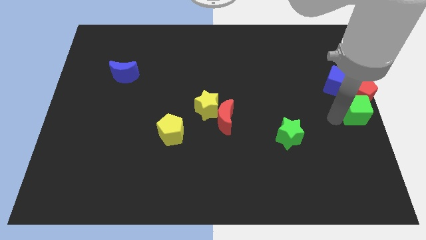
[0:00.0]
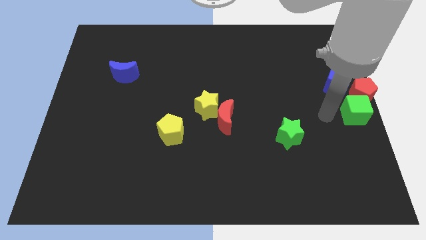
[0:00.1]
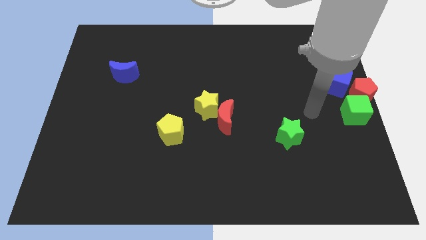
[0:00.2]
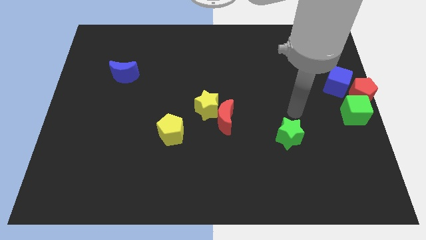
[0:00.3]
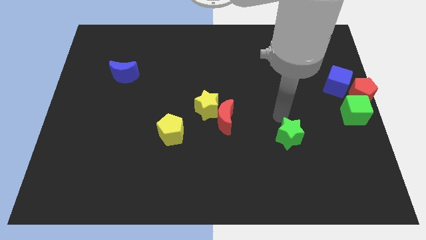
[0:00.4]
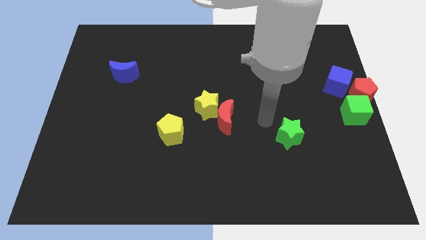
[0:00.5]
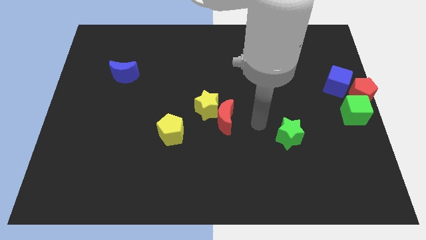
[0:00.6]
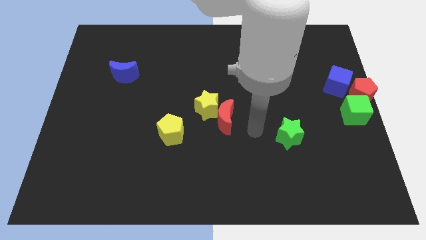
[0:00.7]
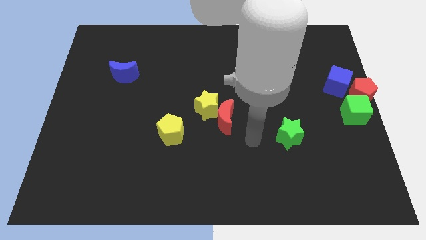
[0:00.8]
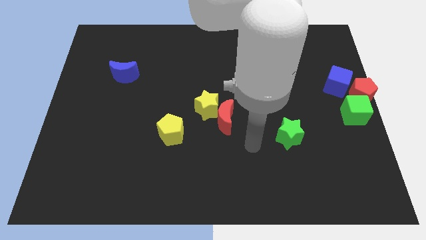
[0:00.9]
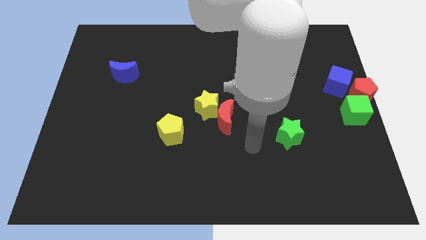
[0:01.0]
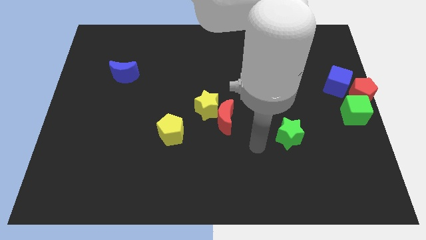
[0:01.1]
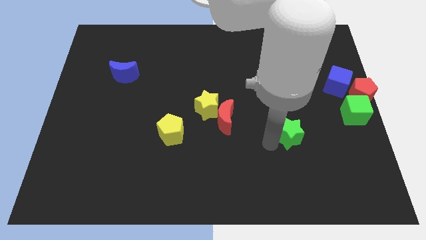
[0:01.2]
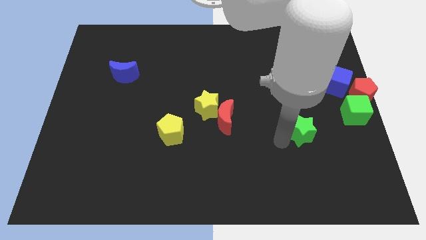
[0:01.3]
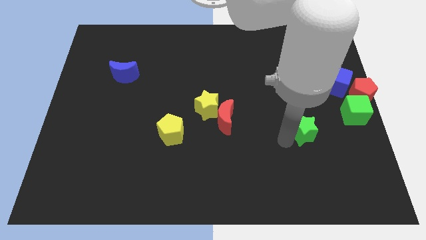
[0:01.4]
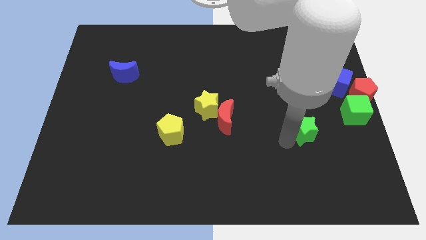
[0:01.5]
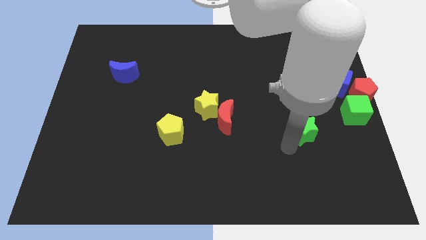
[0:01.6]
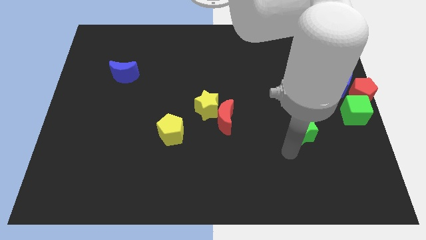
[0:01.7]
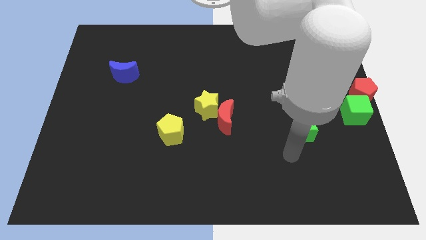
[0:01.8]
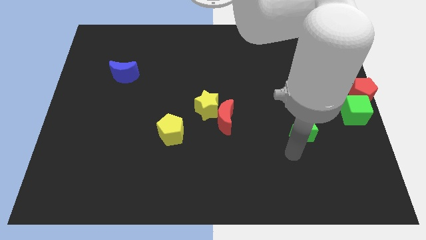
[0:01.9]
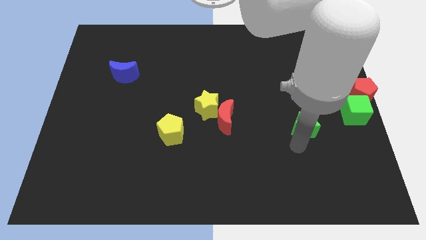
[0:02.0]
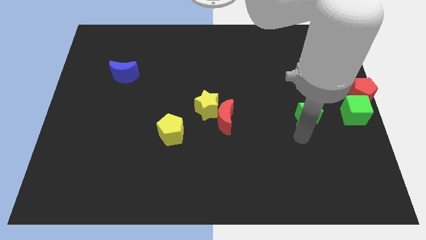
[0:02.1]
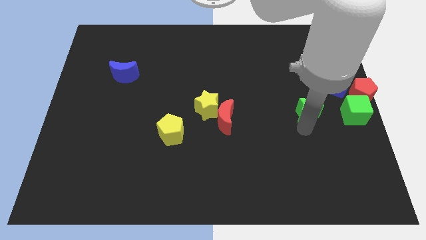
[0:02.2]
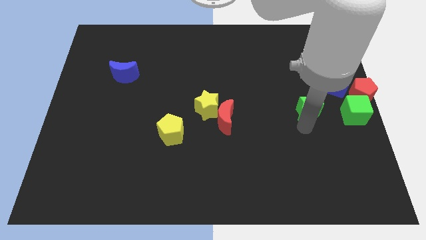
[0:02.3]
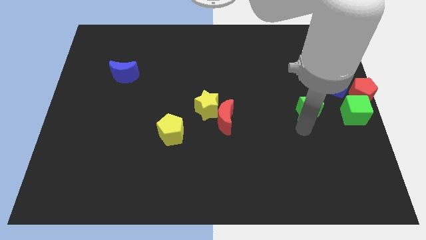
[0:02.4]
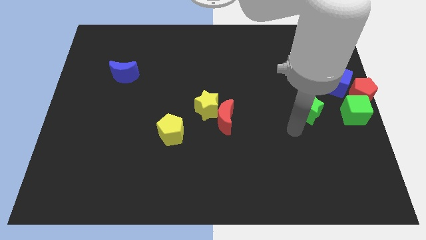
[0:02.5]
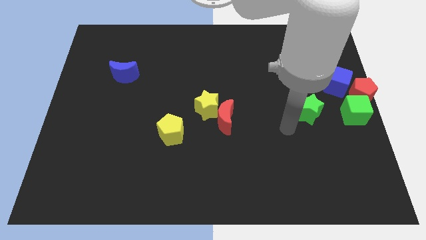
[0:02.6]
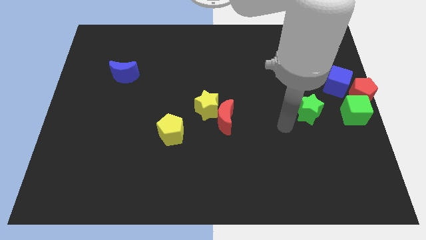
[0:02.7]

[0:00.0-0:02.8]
place the green star left to the green cube

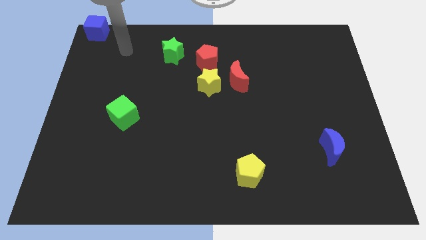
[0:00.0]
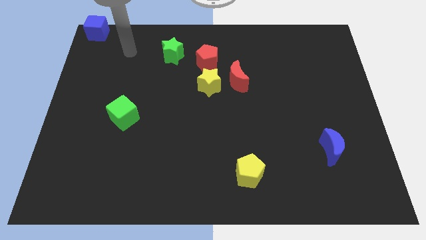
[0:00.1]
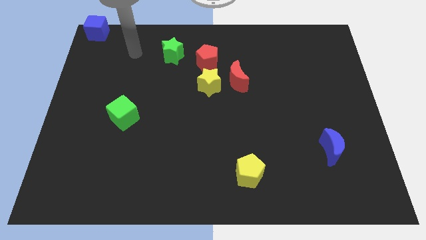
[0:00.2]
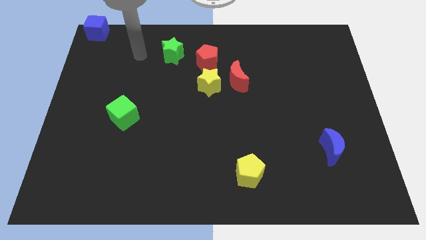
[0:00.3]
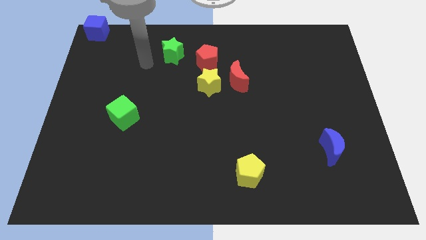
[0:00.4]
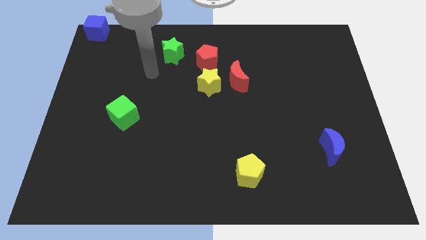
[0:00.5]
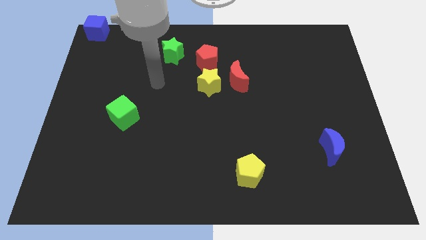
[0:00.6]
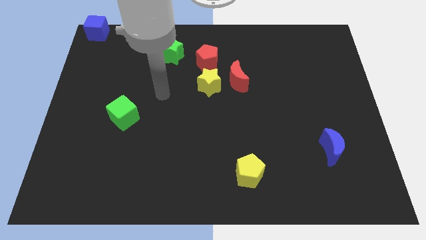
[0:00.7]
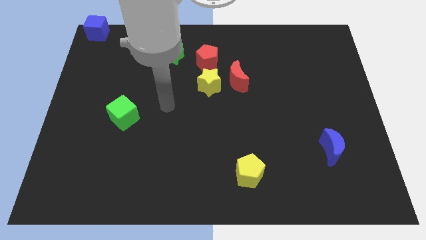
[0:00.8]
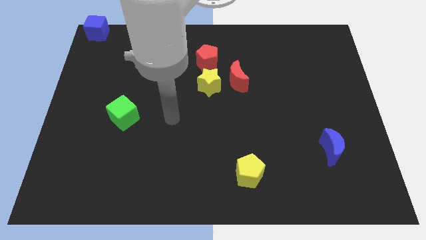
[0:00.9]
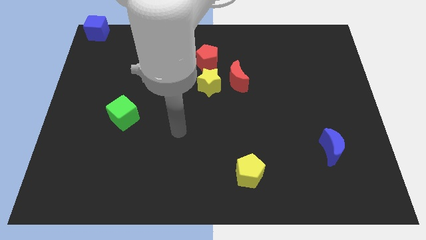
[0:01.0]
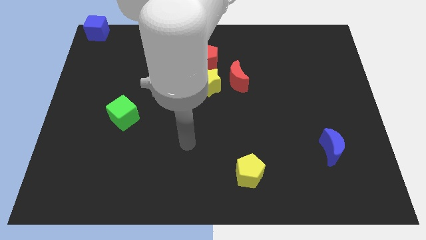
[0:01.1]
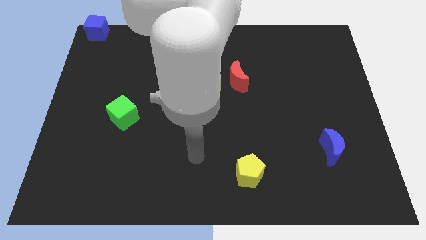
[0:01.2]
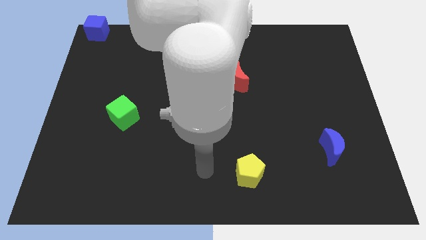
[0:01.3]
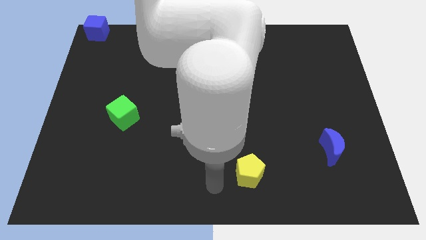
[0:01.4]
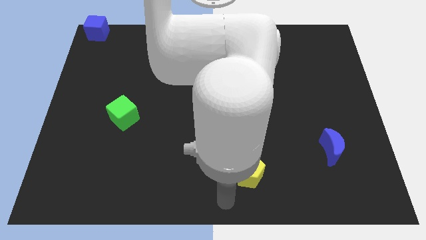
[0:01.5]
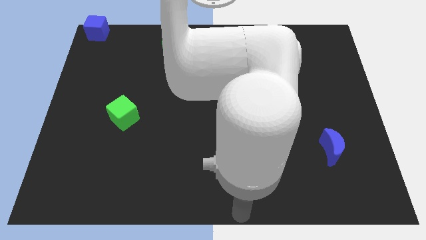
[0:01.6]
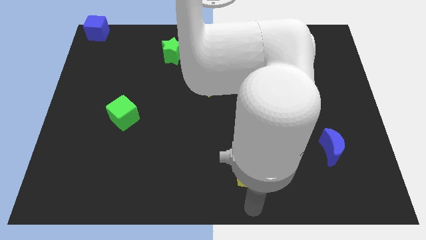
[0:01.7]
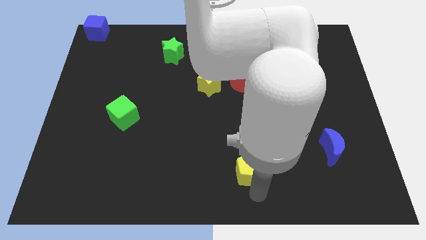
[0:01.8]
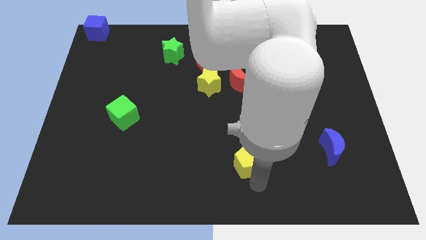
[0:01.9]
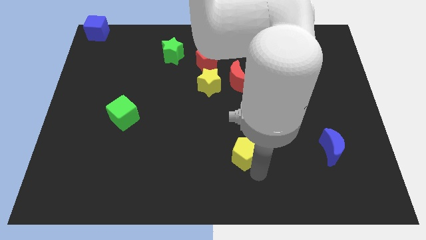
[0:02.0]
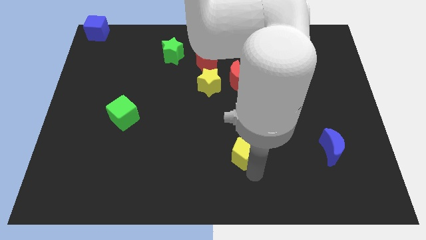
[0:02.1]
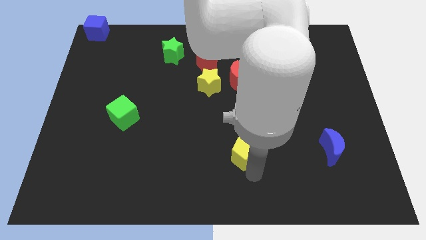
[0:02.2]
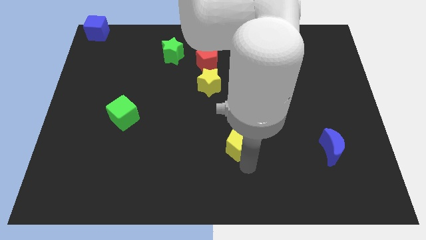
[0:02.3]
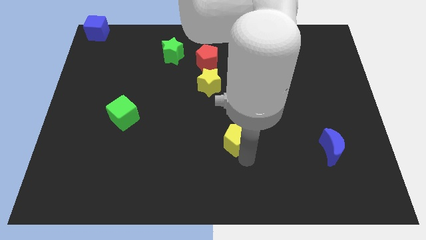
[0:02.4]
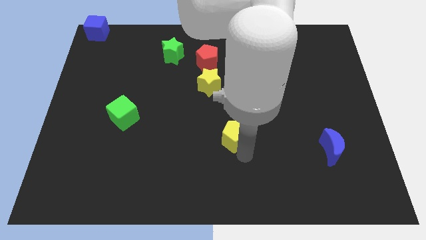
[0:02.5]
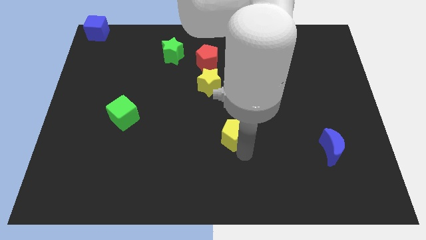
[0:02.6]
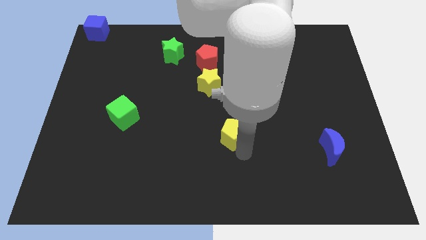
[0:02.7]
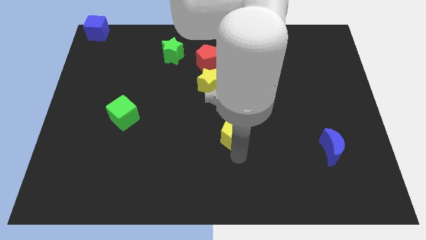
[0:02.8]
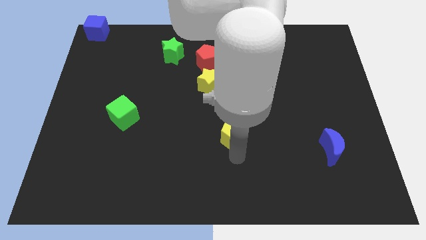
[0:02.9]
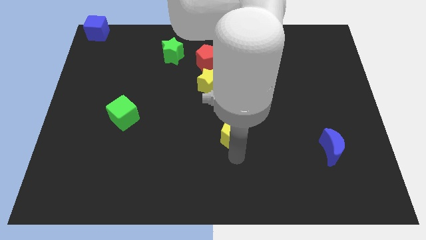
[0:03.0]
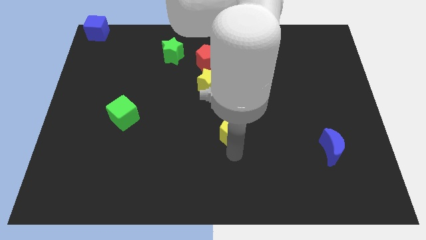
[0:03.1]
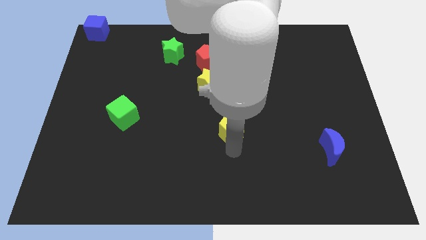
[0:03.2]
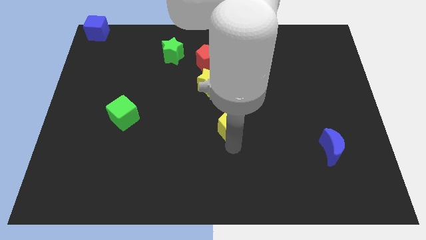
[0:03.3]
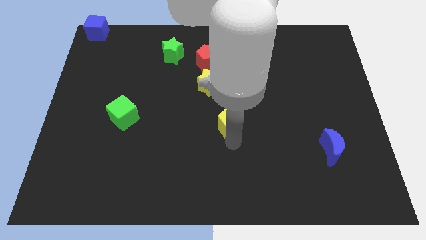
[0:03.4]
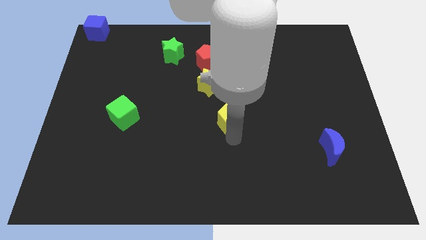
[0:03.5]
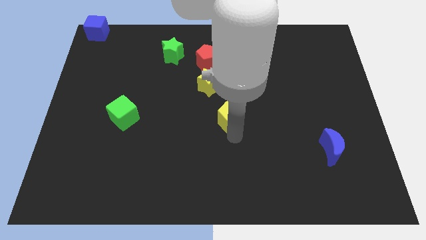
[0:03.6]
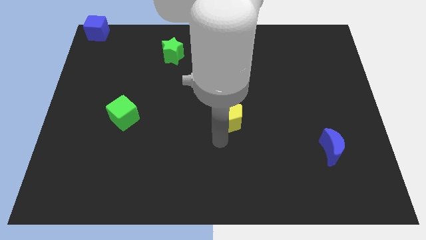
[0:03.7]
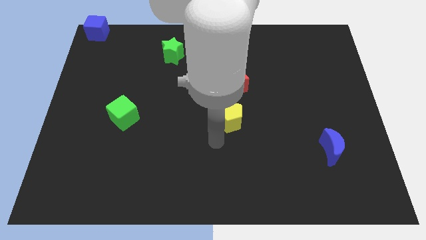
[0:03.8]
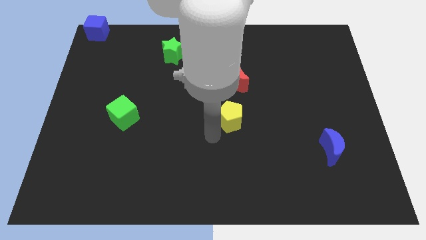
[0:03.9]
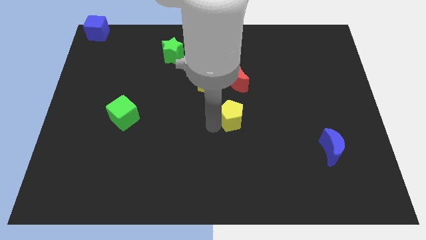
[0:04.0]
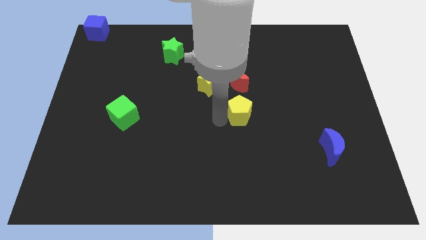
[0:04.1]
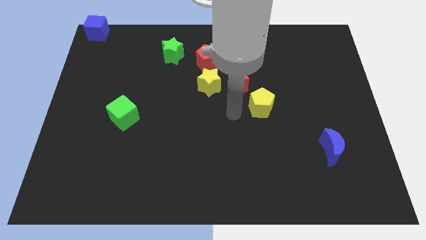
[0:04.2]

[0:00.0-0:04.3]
put the yellow pentagon below the red moon

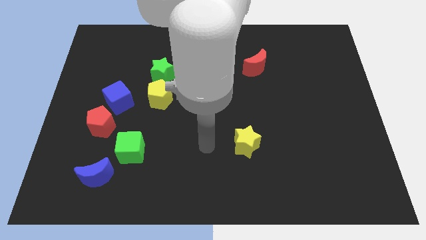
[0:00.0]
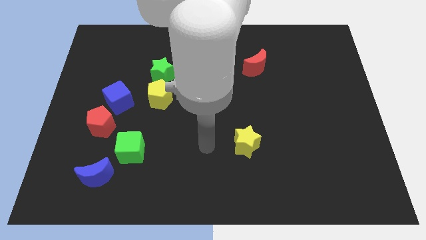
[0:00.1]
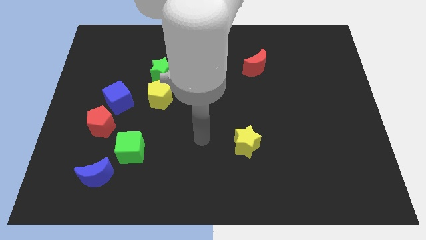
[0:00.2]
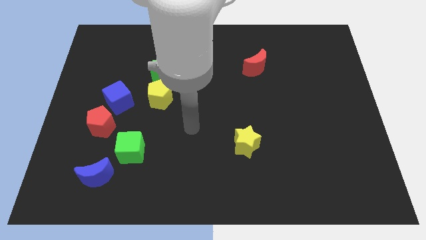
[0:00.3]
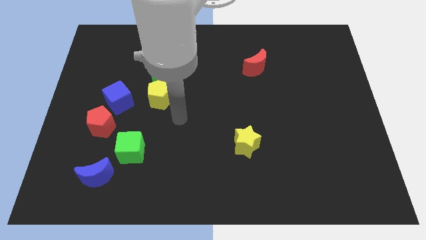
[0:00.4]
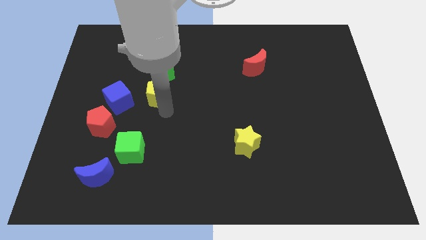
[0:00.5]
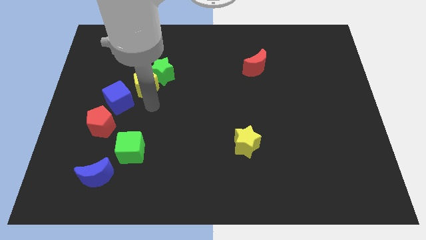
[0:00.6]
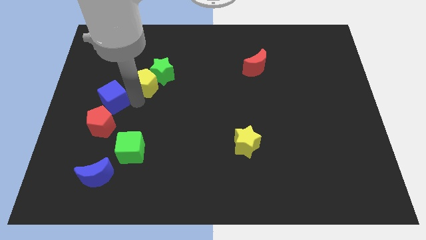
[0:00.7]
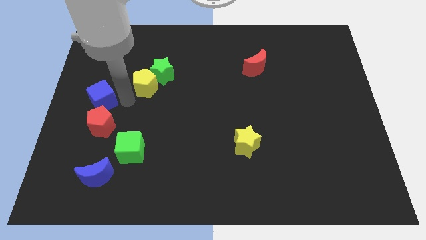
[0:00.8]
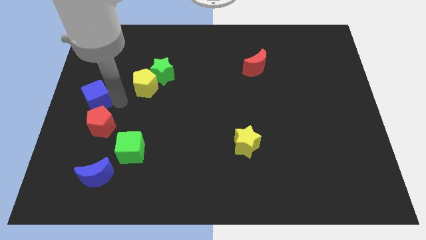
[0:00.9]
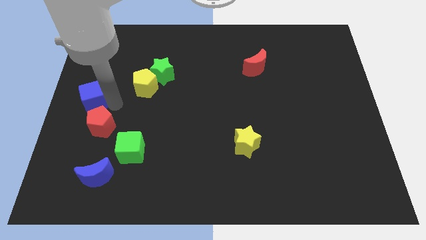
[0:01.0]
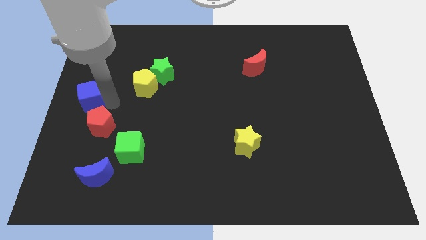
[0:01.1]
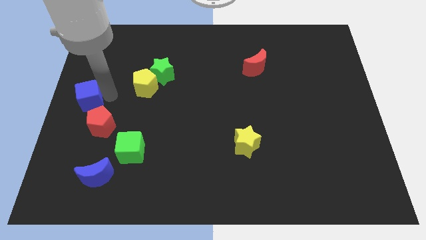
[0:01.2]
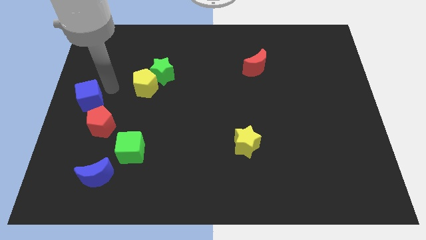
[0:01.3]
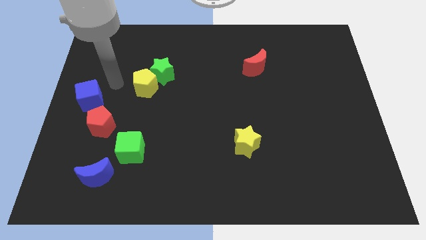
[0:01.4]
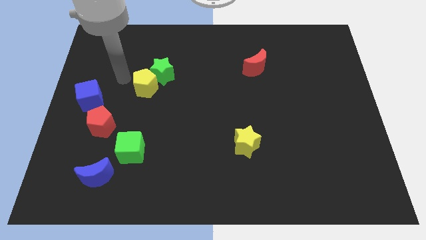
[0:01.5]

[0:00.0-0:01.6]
move the blue cube to the left side slightly
